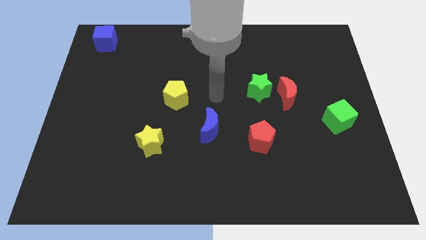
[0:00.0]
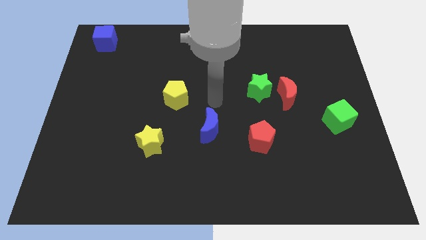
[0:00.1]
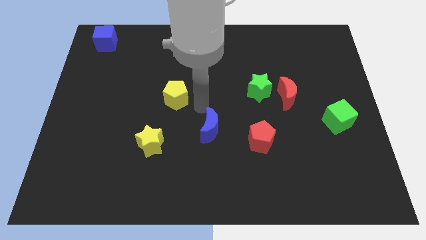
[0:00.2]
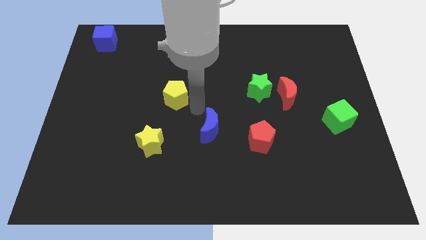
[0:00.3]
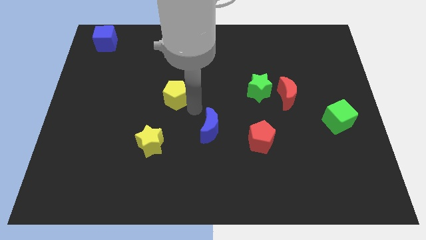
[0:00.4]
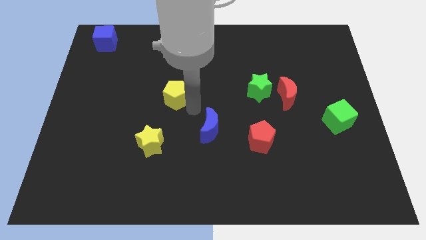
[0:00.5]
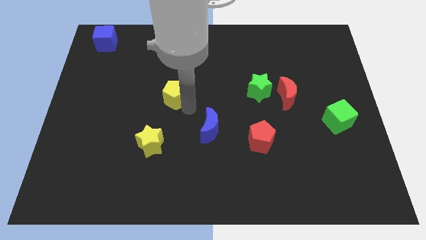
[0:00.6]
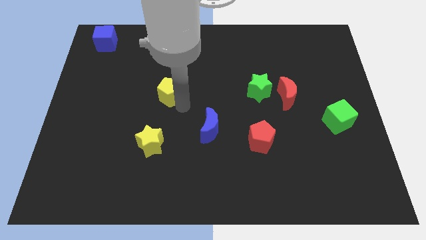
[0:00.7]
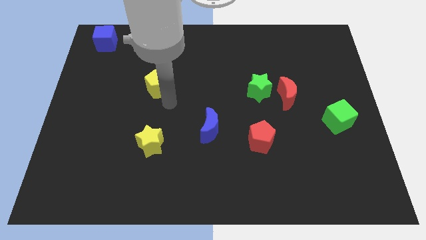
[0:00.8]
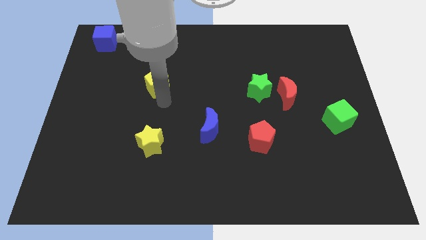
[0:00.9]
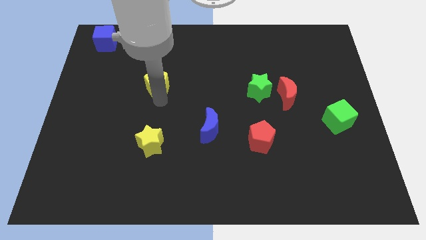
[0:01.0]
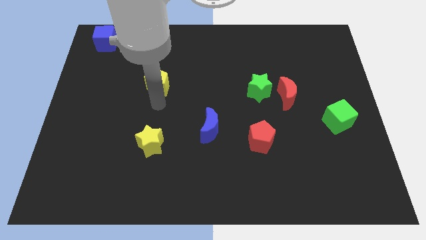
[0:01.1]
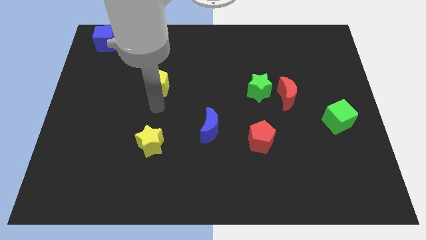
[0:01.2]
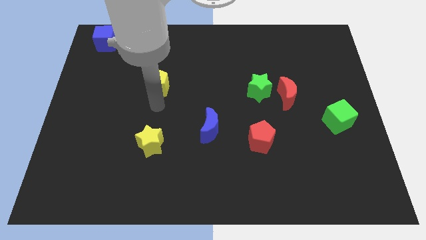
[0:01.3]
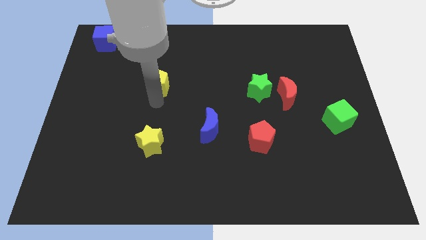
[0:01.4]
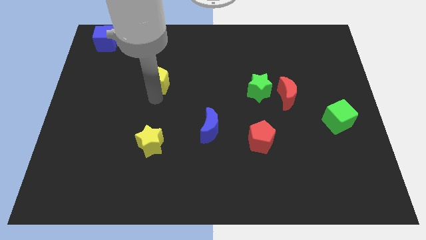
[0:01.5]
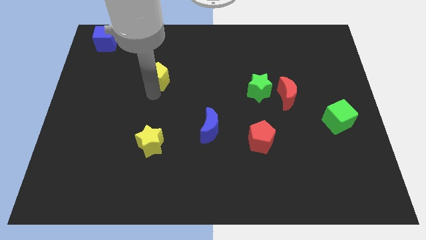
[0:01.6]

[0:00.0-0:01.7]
place the yellow pentagon vertically above the yellow star

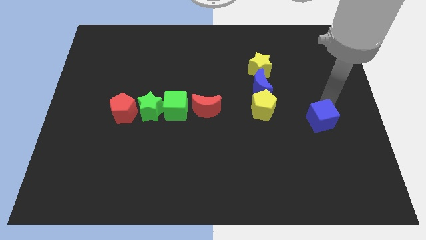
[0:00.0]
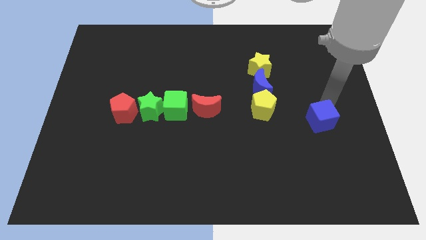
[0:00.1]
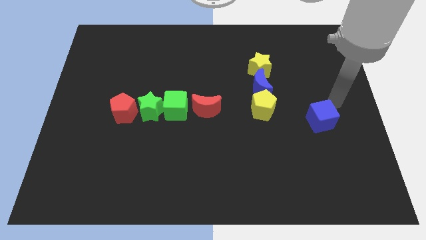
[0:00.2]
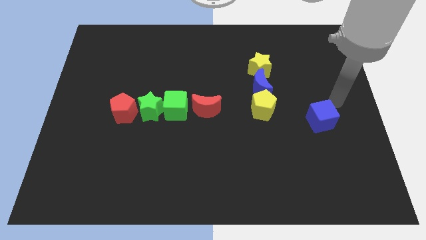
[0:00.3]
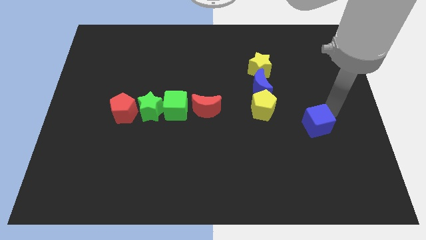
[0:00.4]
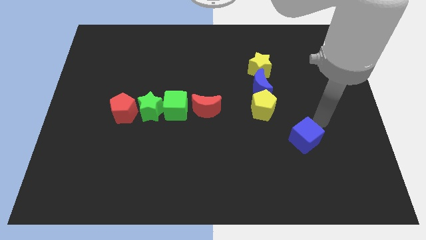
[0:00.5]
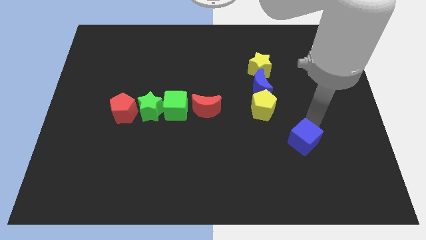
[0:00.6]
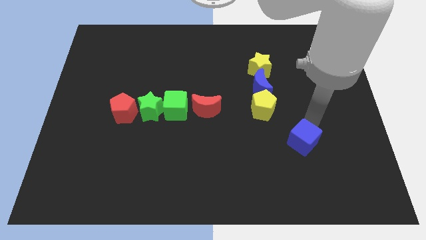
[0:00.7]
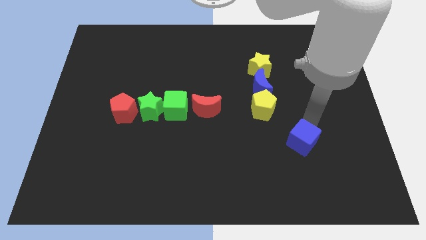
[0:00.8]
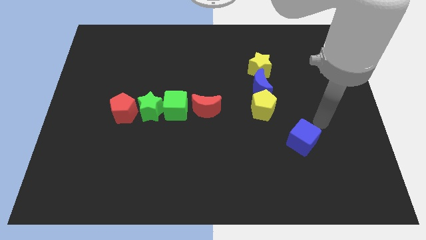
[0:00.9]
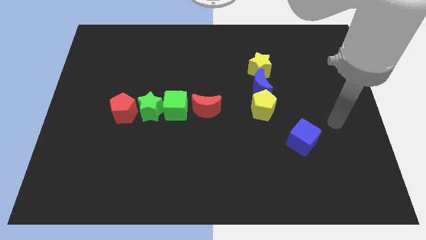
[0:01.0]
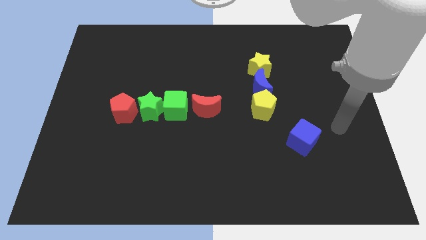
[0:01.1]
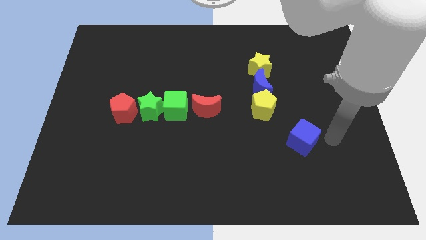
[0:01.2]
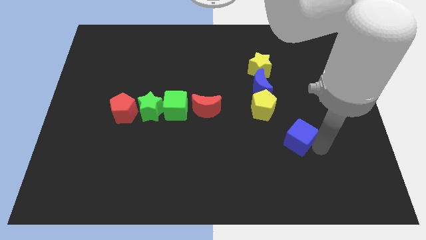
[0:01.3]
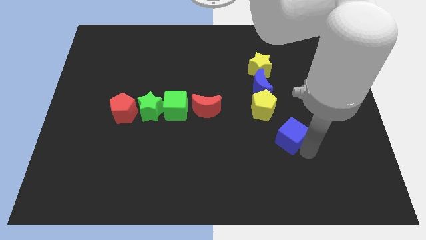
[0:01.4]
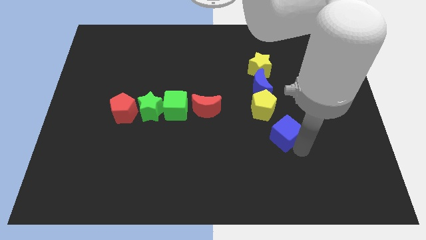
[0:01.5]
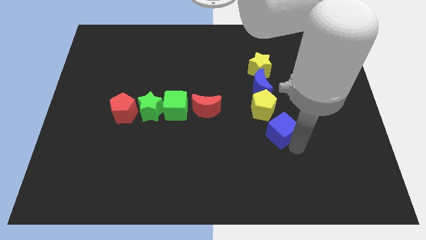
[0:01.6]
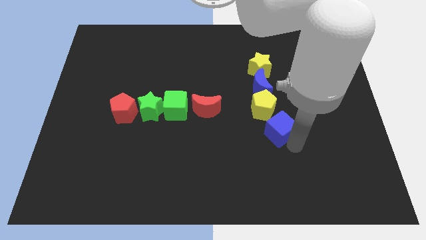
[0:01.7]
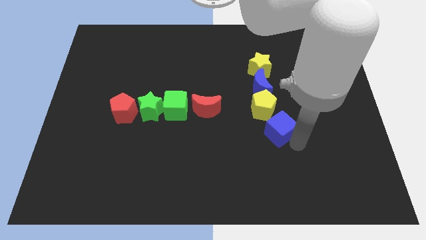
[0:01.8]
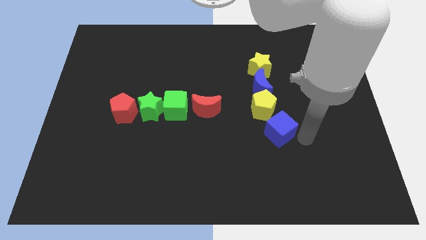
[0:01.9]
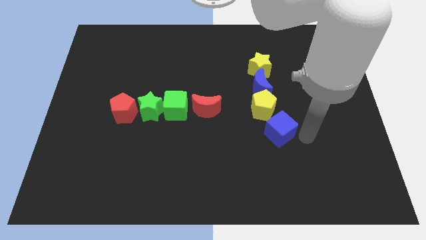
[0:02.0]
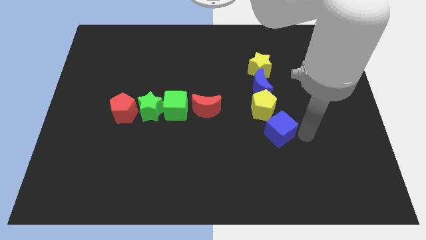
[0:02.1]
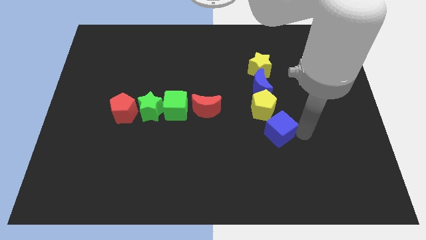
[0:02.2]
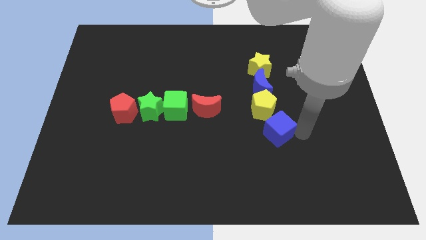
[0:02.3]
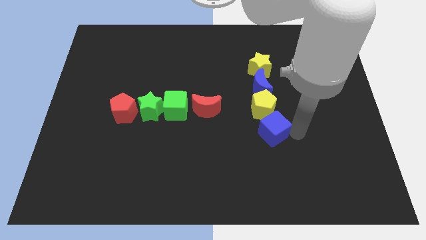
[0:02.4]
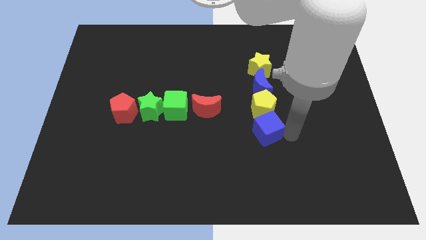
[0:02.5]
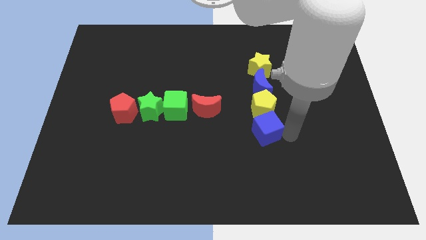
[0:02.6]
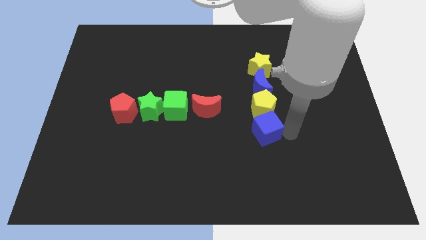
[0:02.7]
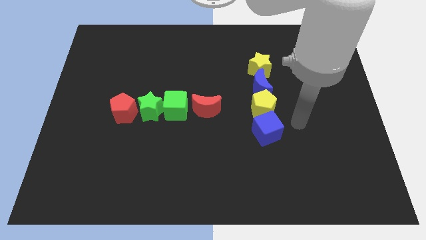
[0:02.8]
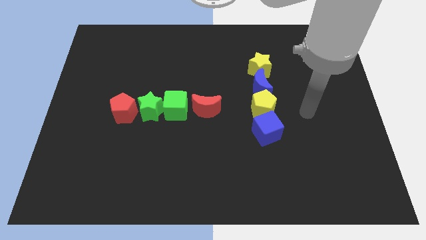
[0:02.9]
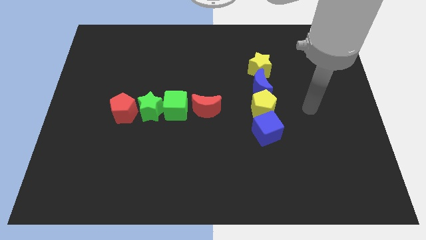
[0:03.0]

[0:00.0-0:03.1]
make the blue cube touch the bottom of the yellow pentagon

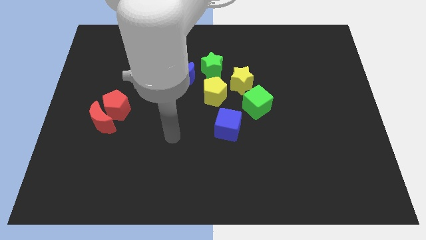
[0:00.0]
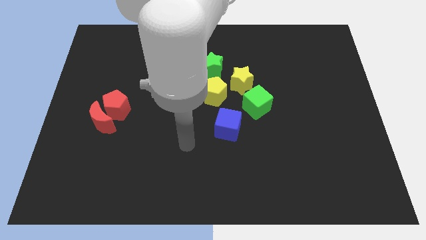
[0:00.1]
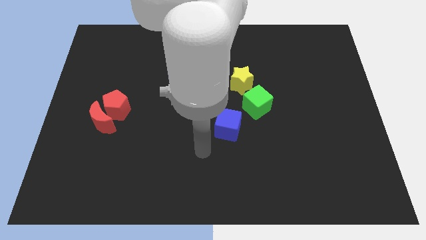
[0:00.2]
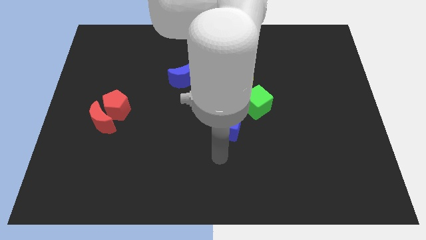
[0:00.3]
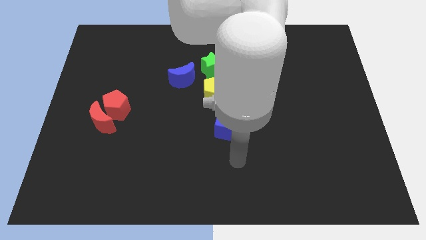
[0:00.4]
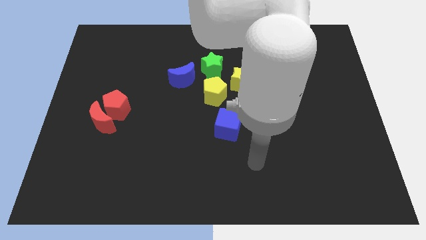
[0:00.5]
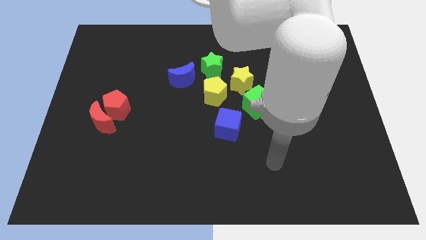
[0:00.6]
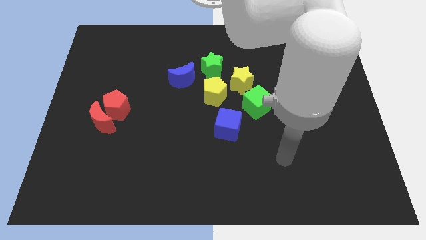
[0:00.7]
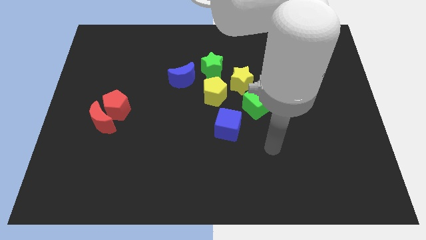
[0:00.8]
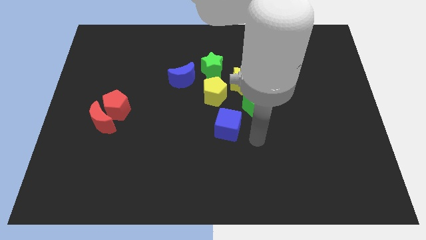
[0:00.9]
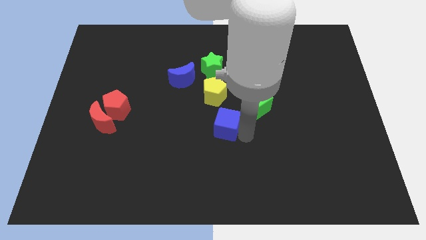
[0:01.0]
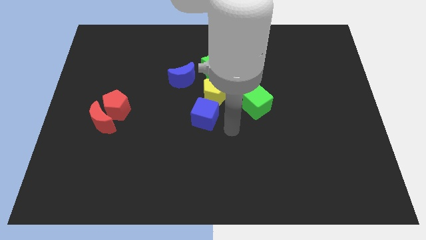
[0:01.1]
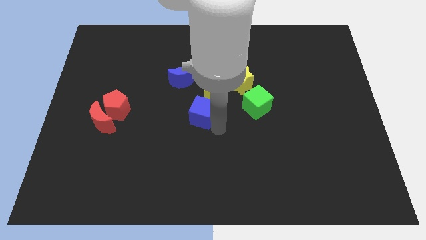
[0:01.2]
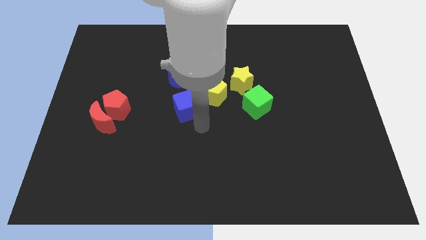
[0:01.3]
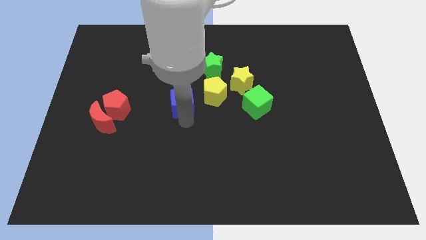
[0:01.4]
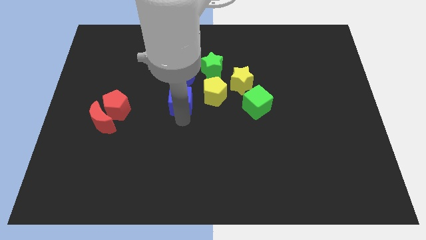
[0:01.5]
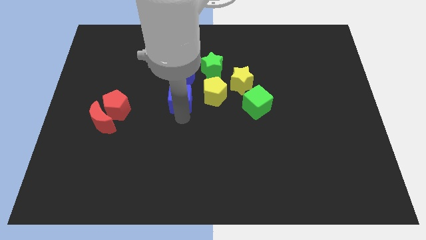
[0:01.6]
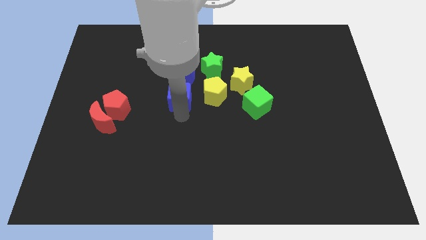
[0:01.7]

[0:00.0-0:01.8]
place blue cube below blue moon

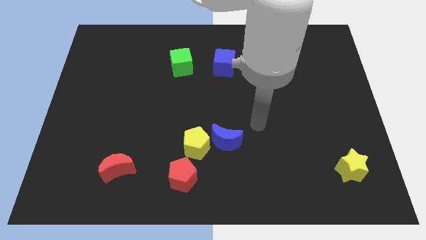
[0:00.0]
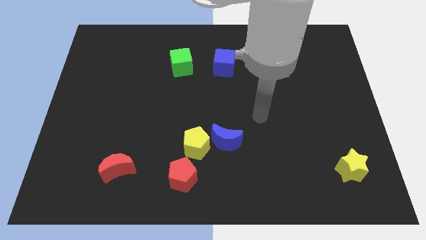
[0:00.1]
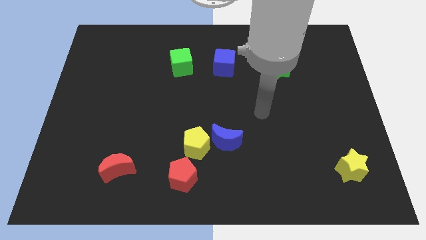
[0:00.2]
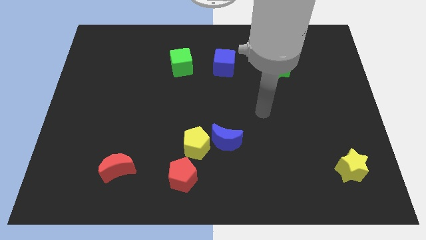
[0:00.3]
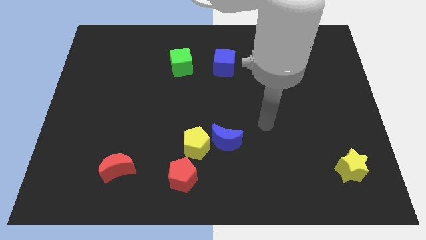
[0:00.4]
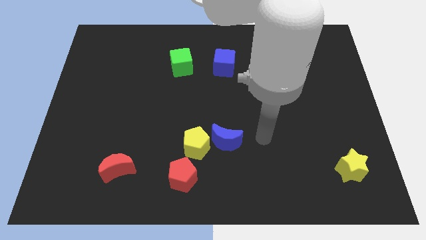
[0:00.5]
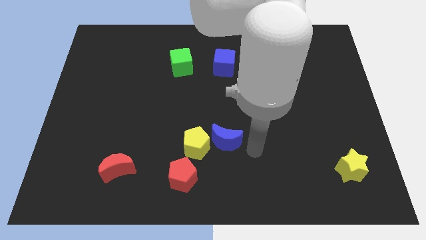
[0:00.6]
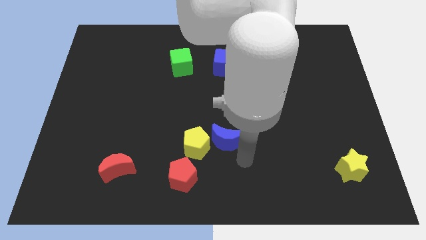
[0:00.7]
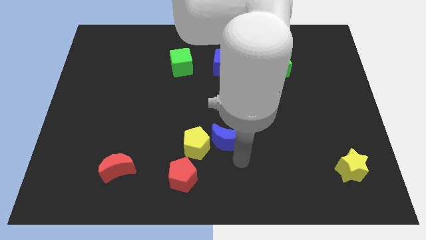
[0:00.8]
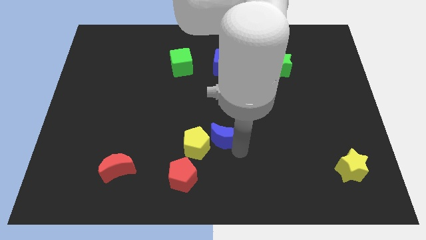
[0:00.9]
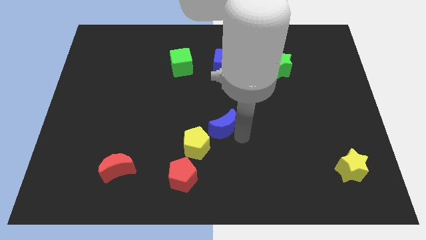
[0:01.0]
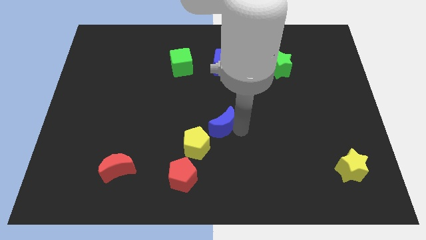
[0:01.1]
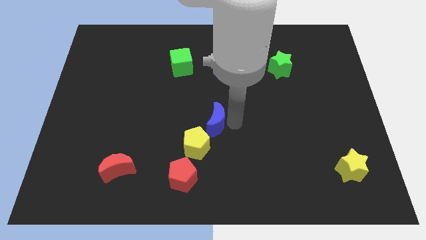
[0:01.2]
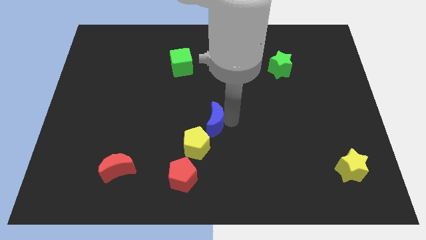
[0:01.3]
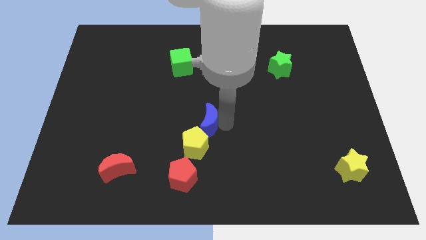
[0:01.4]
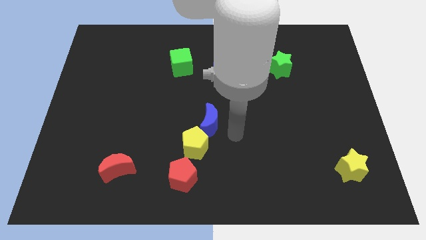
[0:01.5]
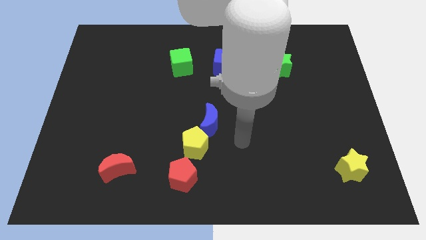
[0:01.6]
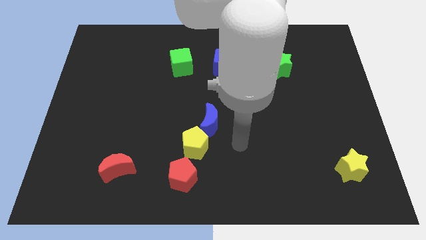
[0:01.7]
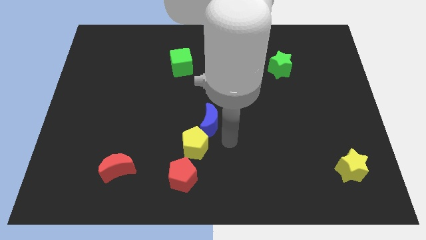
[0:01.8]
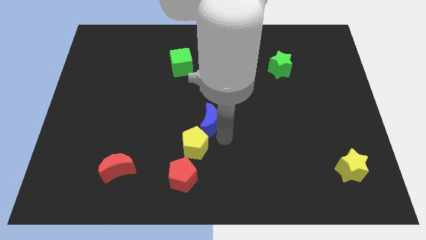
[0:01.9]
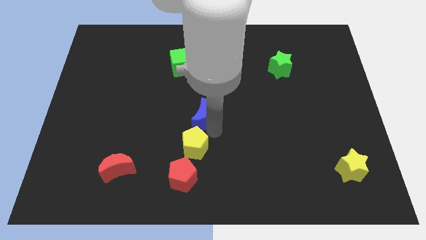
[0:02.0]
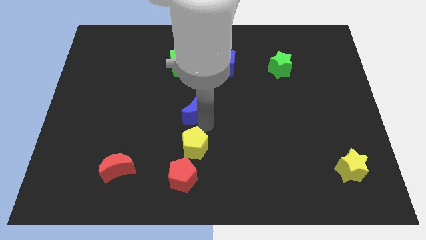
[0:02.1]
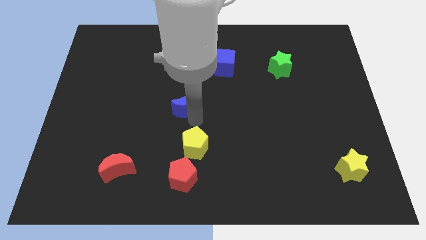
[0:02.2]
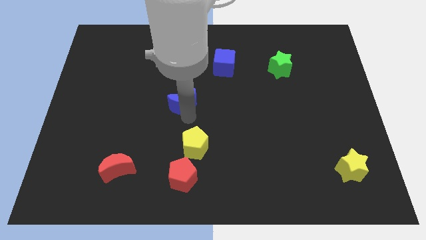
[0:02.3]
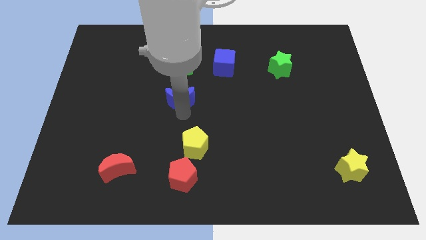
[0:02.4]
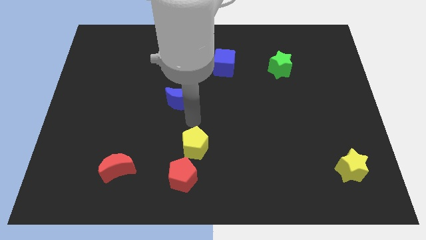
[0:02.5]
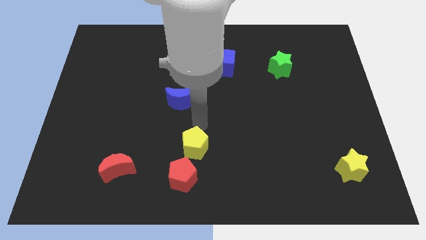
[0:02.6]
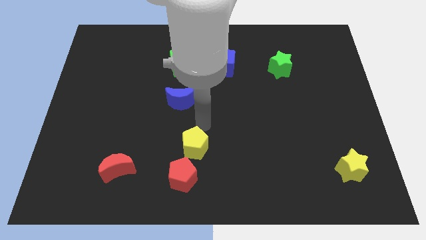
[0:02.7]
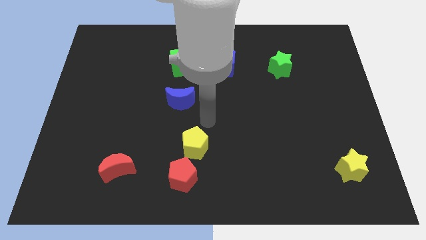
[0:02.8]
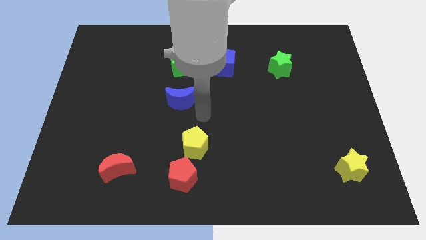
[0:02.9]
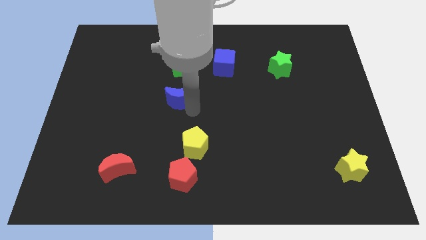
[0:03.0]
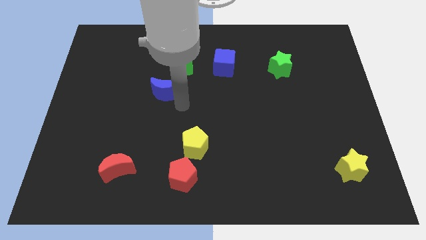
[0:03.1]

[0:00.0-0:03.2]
slide the blue moon diagonally top left to the yellow pentagon
